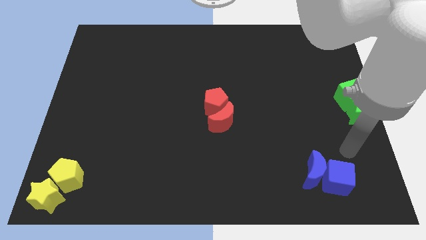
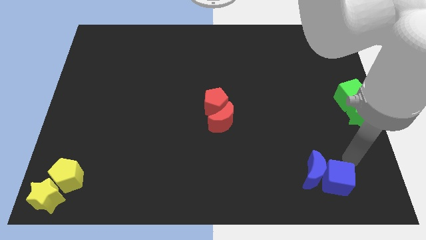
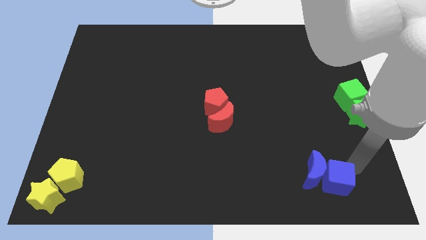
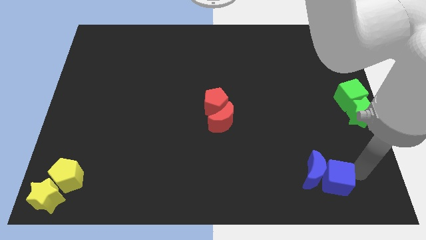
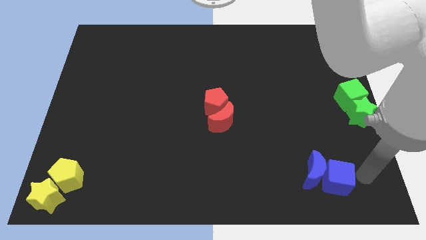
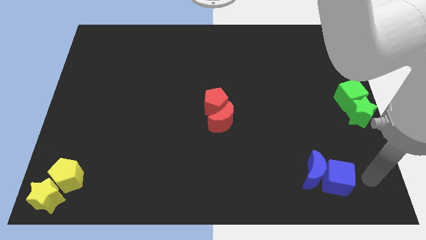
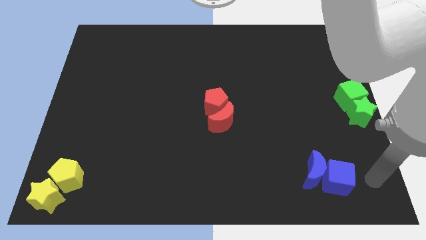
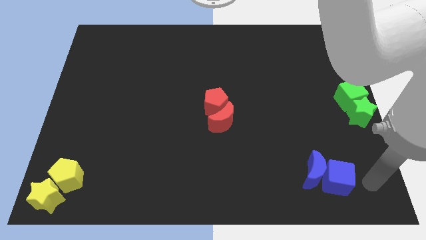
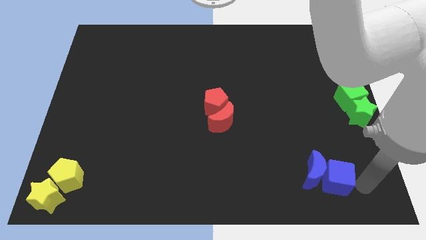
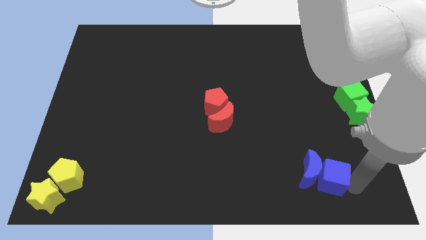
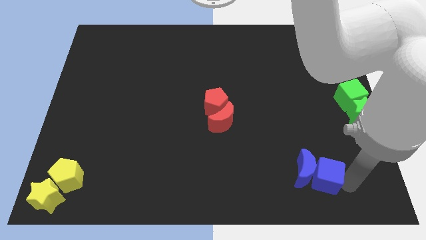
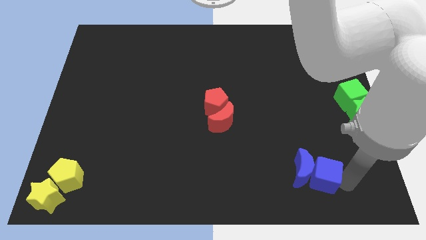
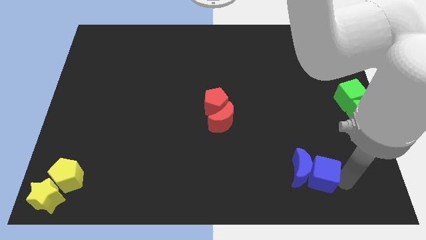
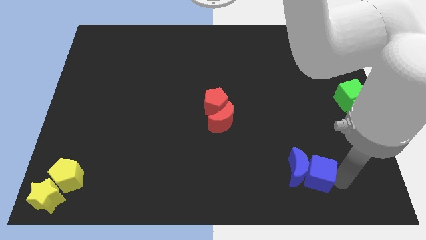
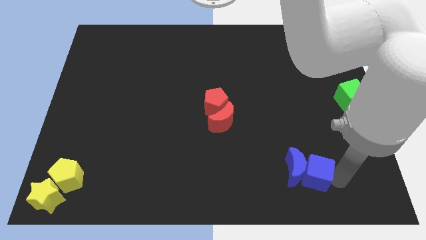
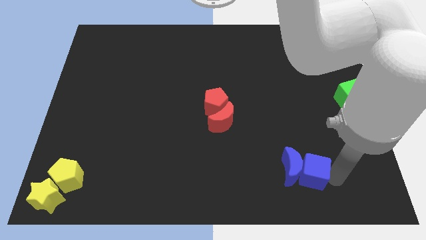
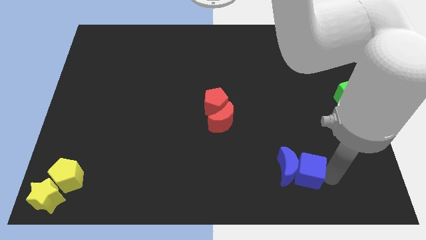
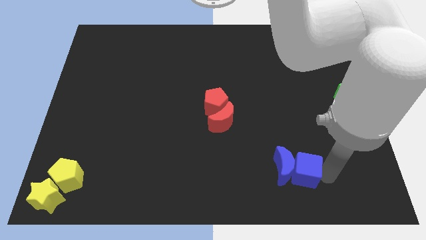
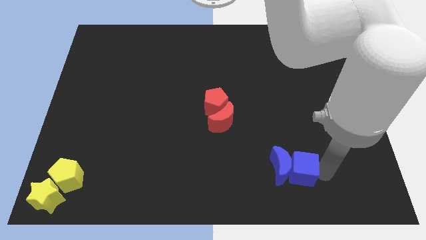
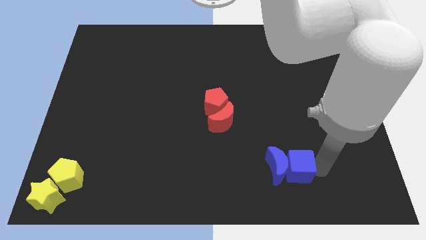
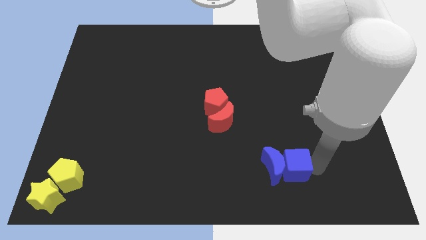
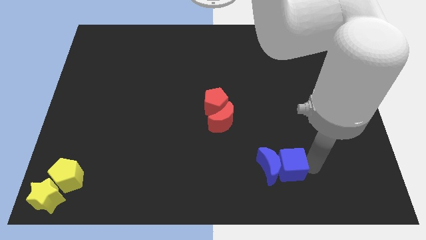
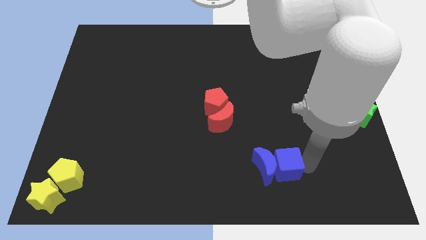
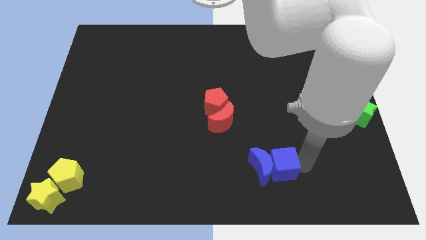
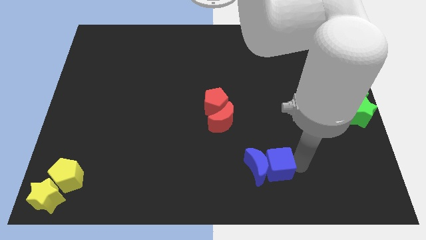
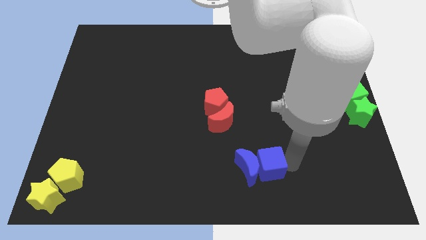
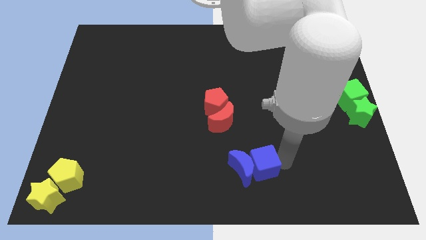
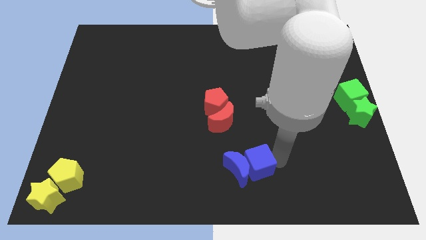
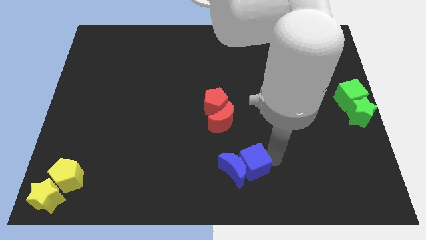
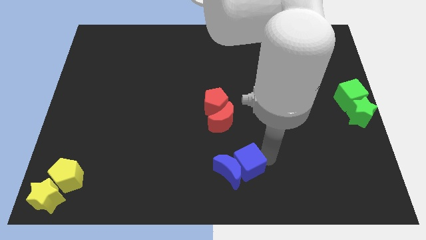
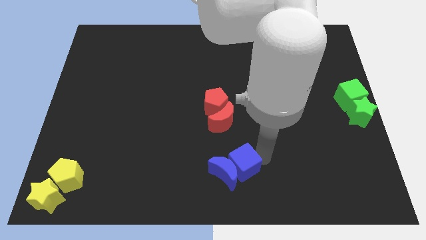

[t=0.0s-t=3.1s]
move the blue cube along with the blue crescent vertically below the red blocks

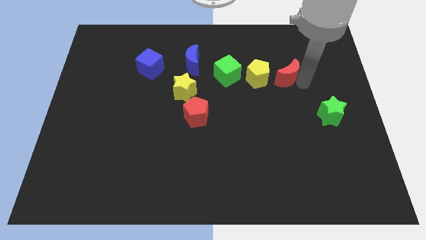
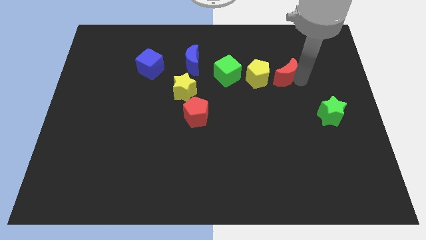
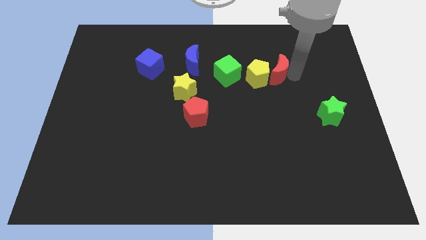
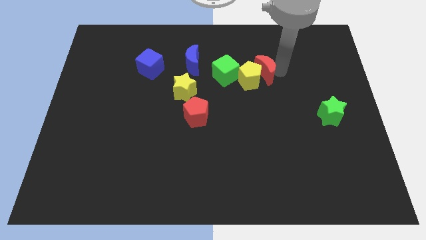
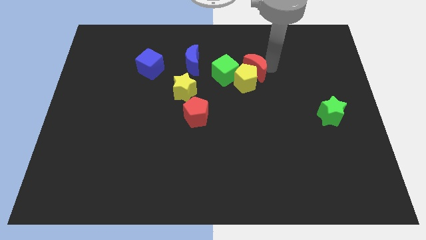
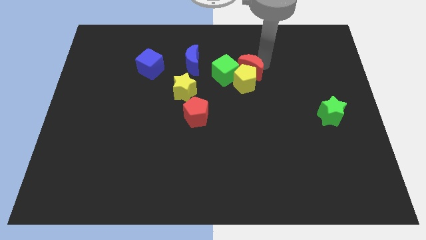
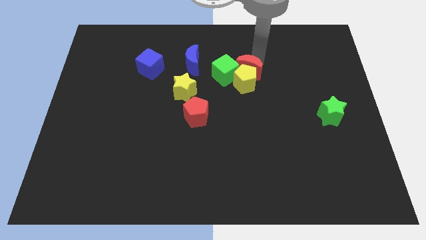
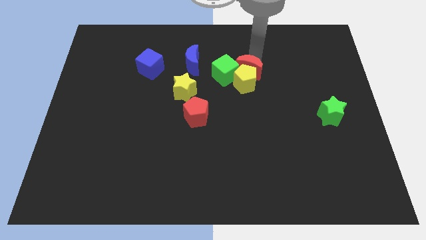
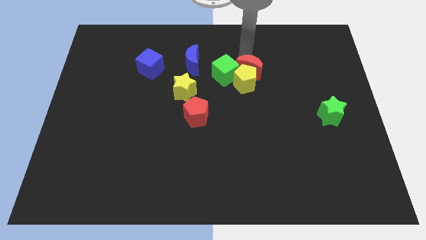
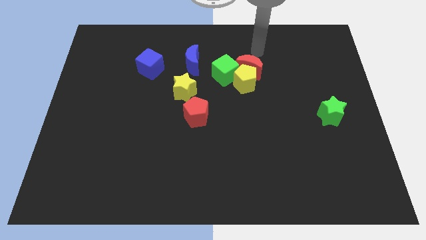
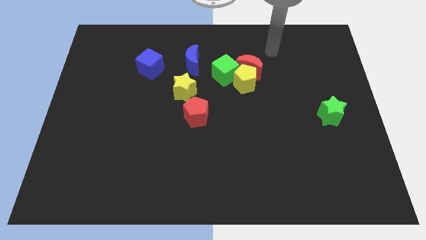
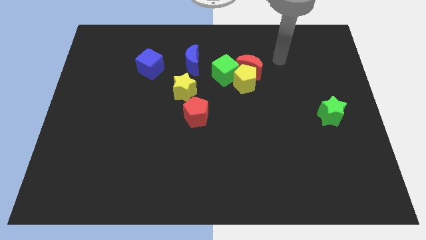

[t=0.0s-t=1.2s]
push the red moon into the yellow pentagon

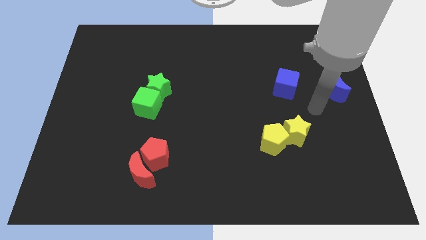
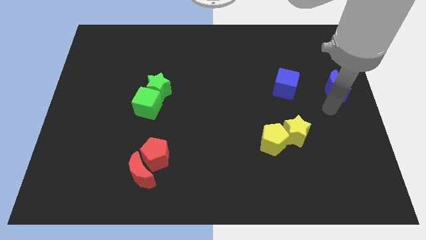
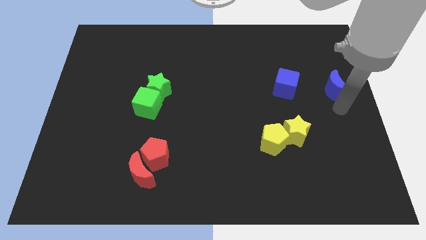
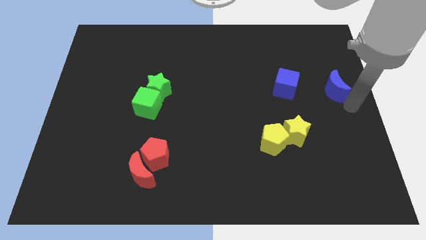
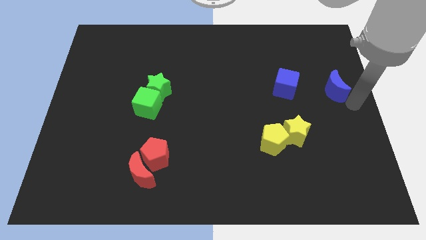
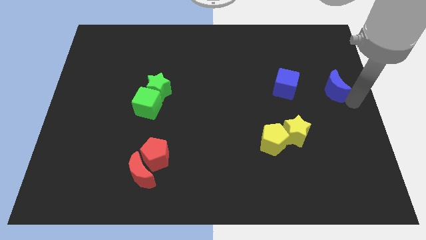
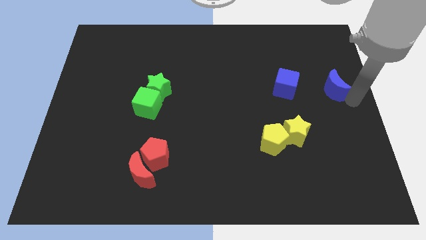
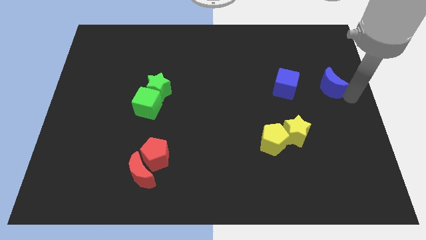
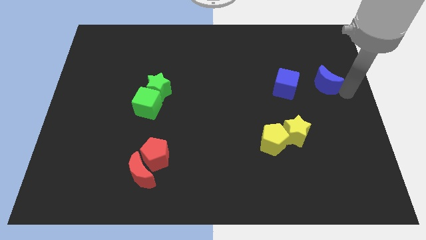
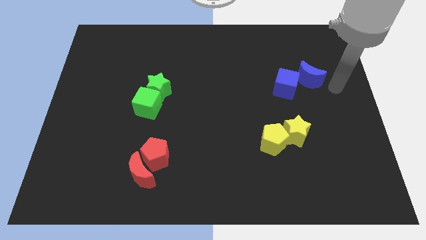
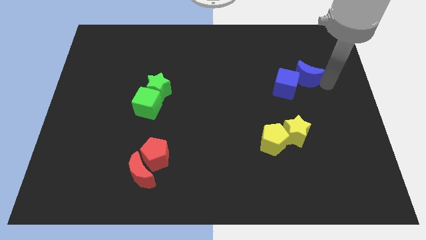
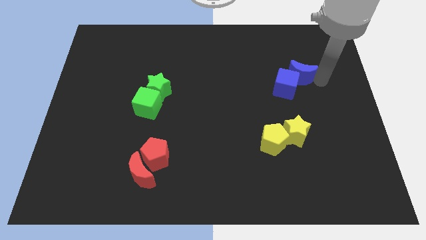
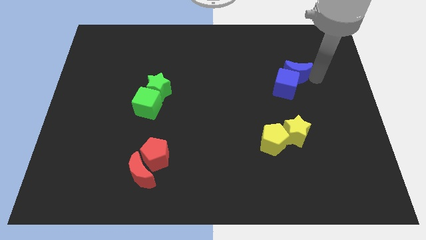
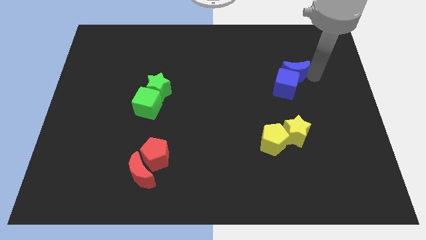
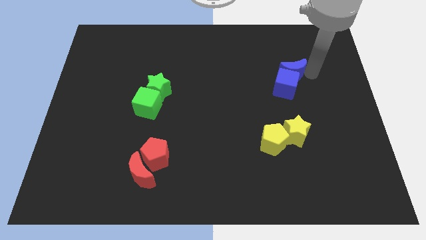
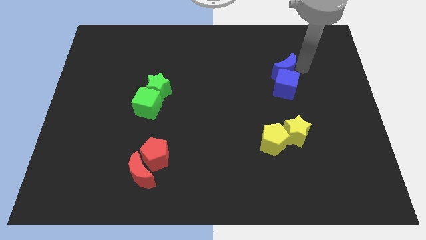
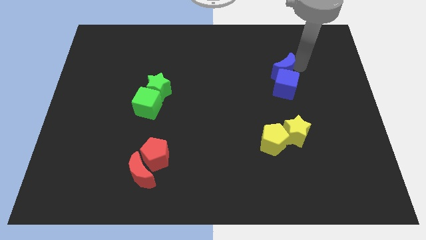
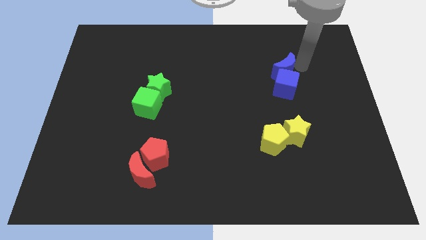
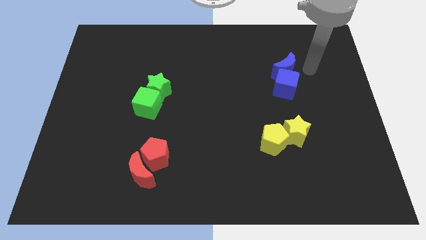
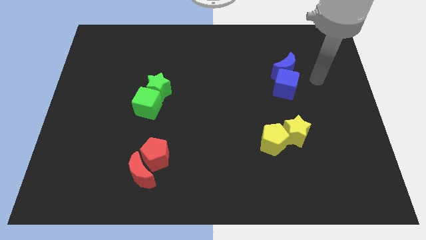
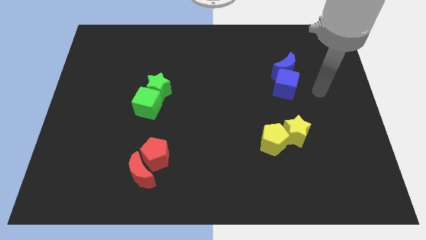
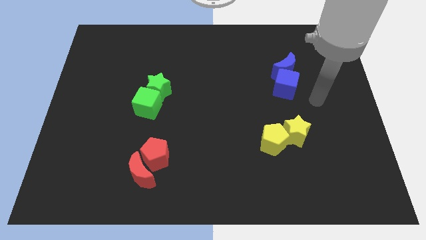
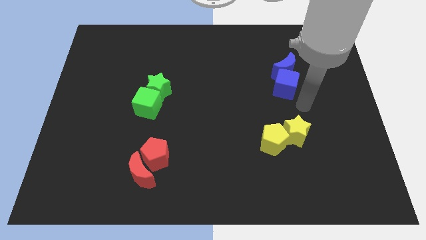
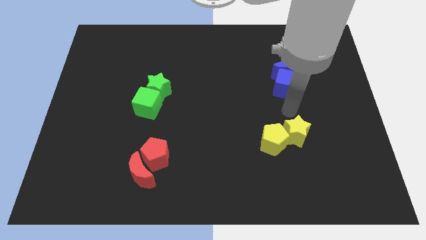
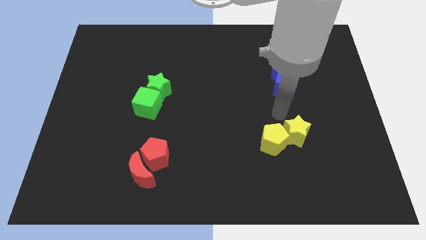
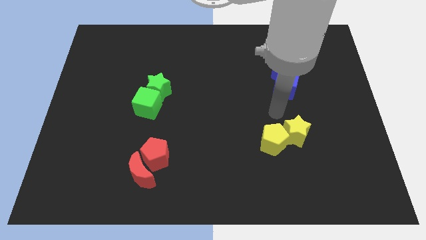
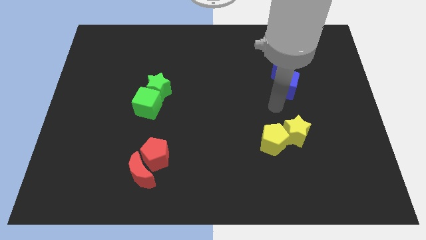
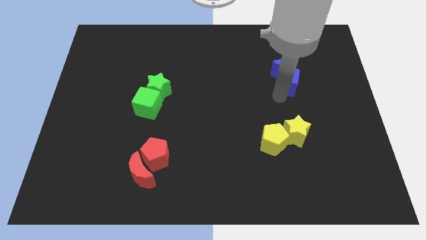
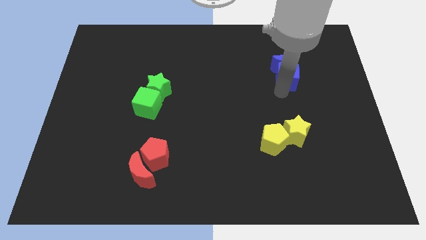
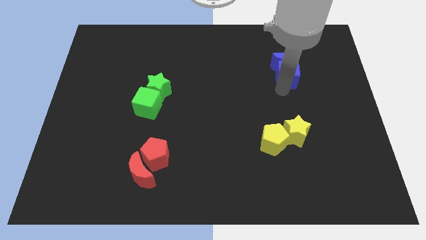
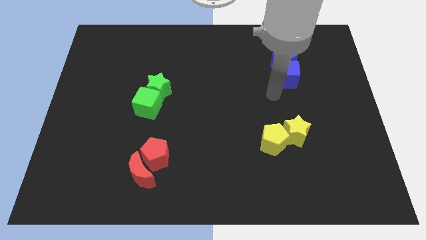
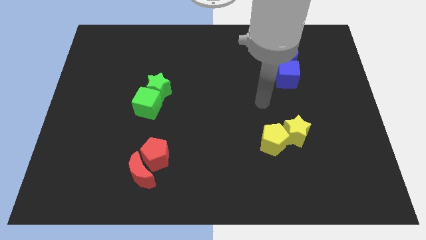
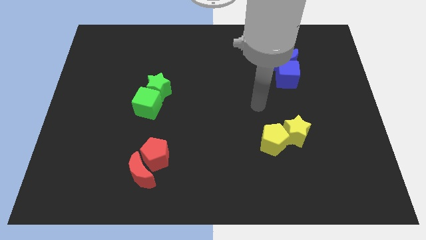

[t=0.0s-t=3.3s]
place the blue moon and blue cube together at the top side of the group of yellow blocks

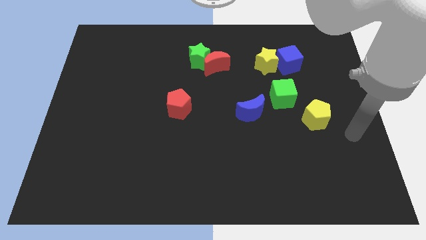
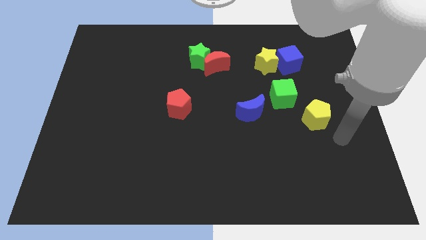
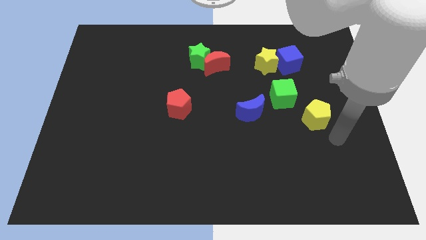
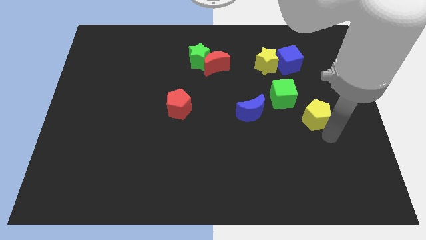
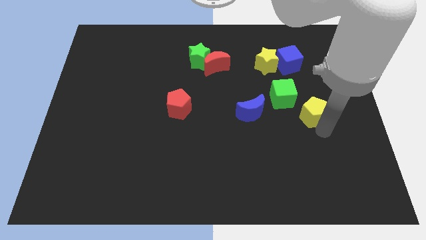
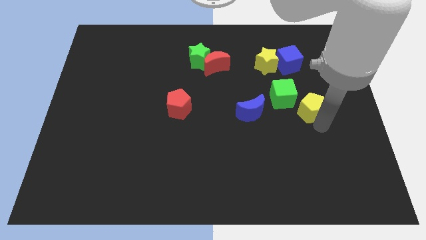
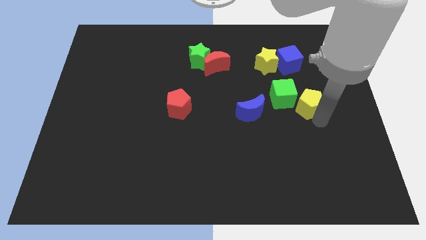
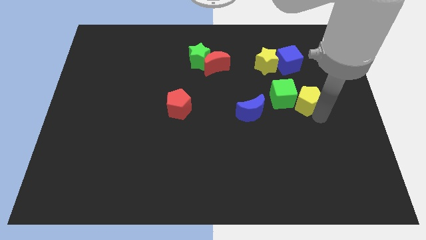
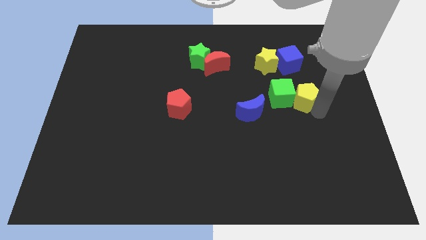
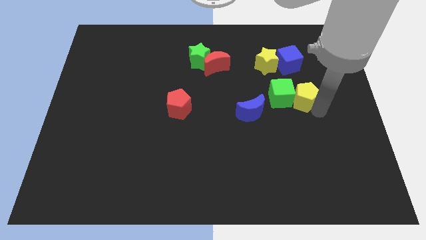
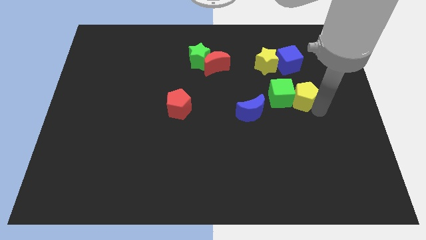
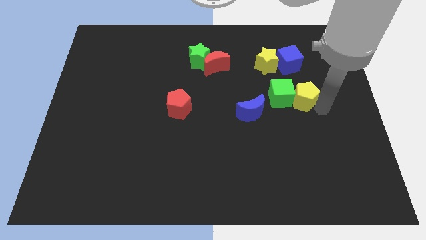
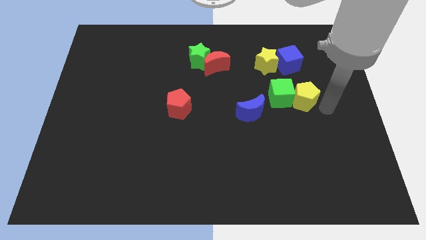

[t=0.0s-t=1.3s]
place yellow pentagon to the right of green cube

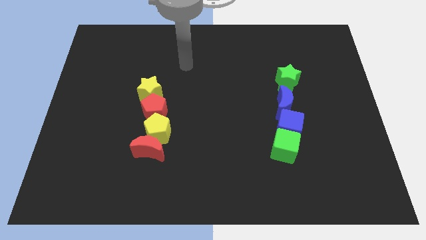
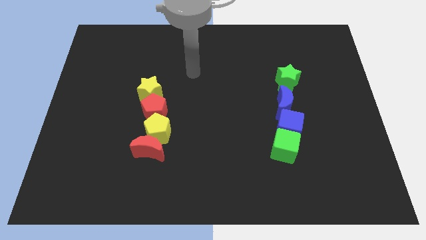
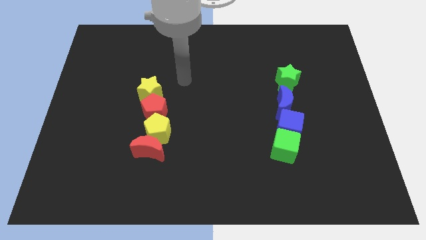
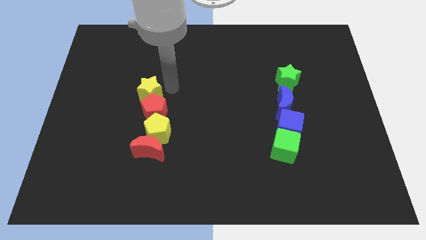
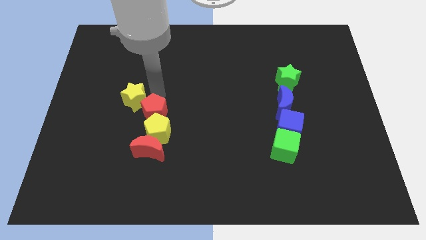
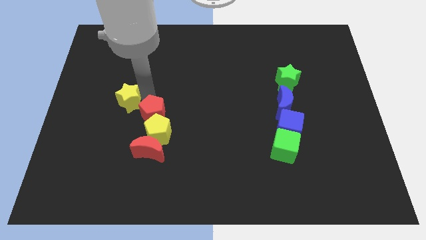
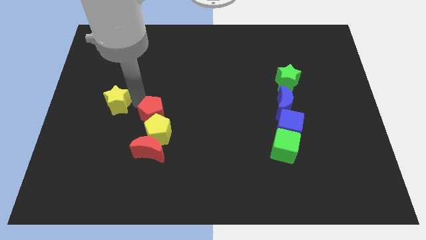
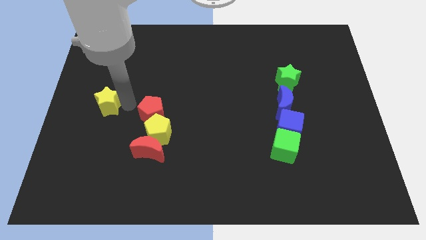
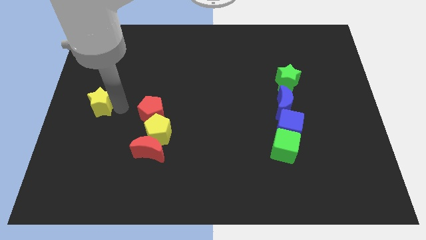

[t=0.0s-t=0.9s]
separate the yellow star from the red pentagon
